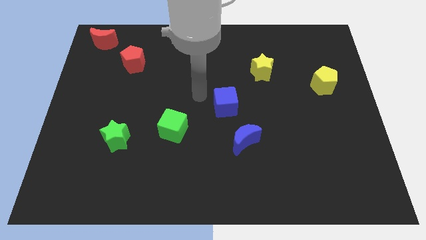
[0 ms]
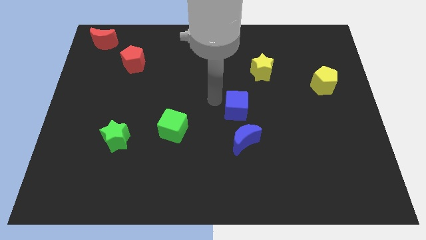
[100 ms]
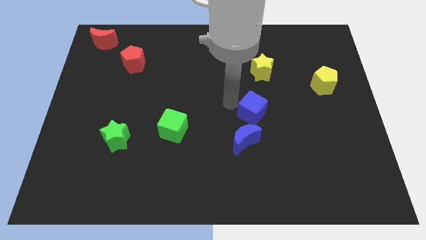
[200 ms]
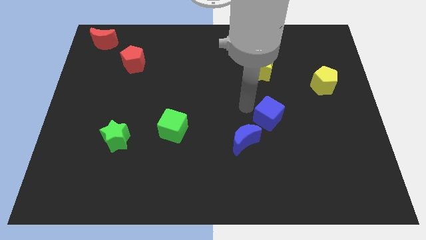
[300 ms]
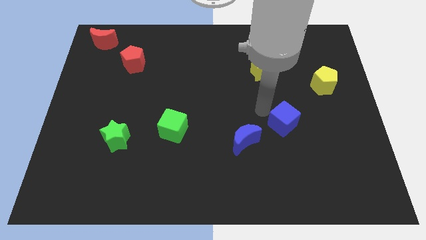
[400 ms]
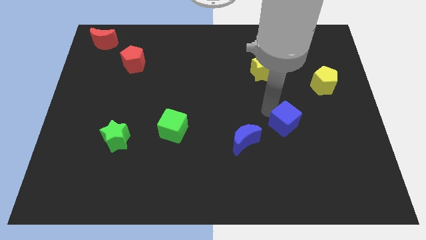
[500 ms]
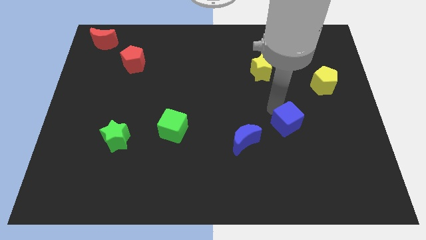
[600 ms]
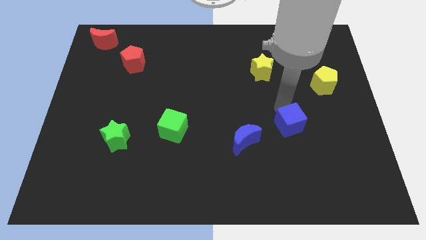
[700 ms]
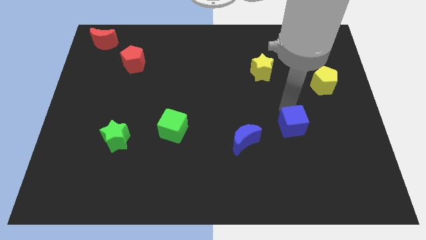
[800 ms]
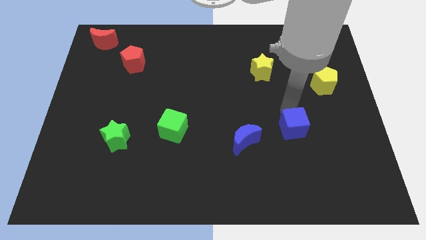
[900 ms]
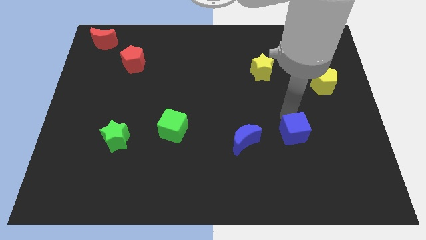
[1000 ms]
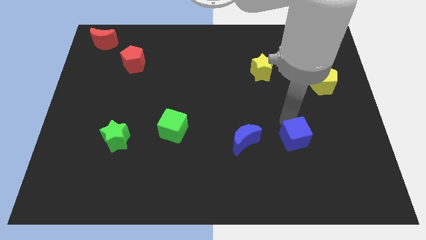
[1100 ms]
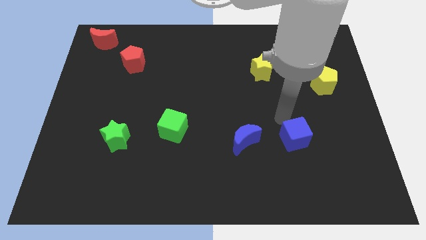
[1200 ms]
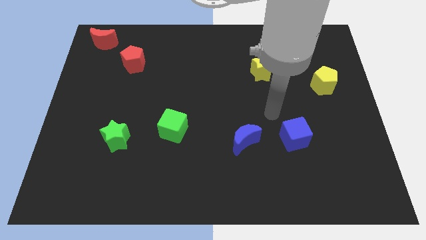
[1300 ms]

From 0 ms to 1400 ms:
slide the blue cube to the right of the blue moon

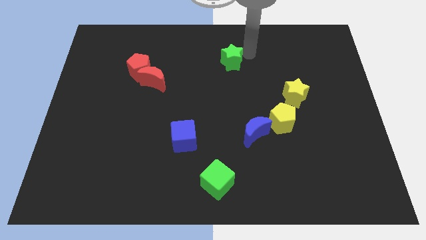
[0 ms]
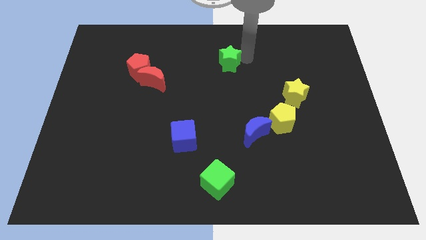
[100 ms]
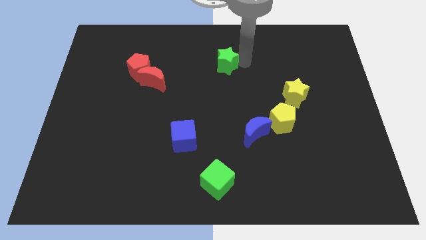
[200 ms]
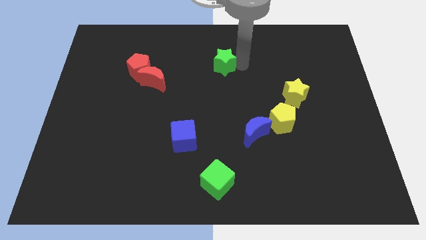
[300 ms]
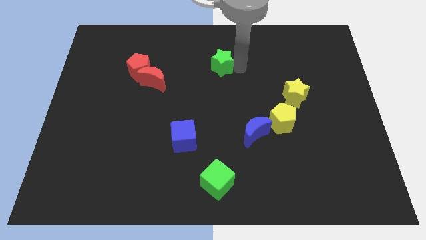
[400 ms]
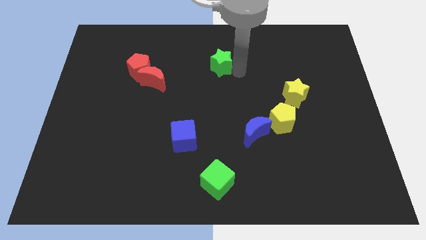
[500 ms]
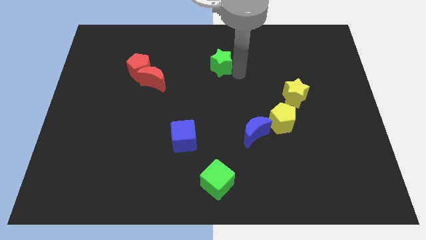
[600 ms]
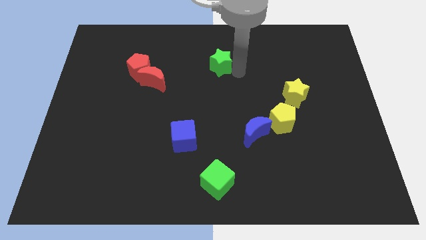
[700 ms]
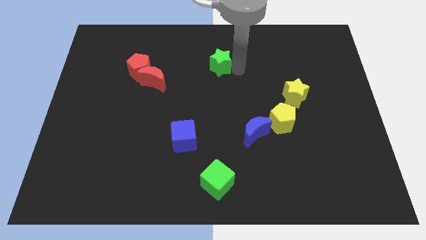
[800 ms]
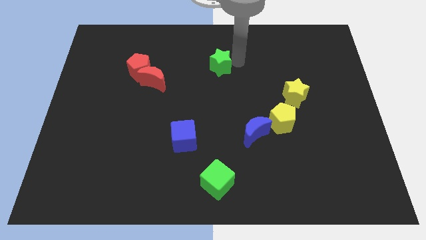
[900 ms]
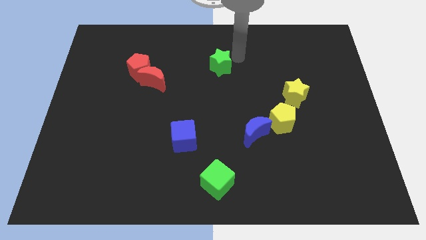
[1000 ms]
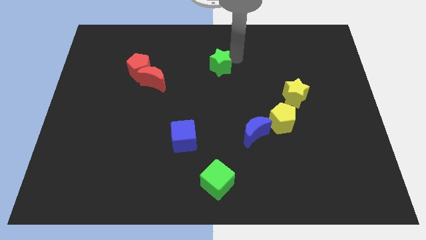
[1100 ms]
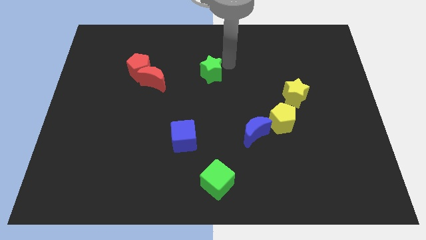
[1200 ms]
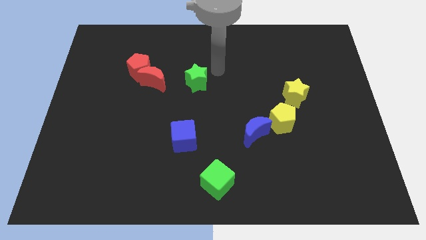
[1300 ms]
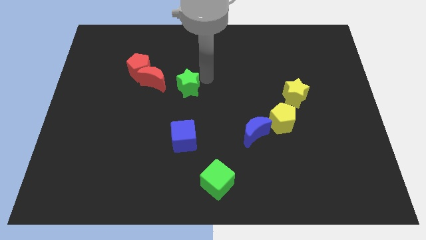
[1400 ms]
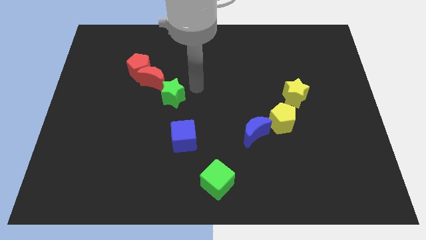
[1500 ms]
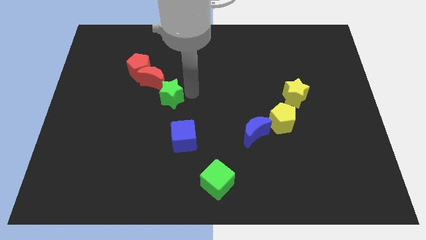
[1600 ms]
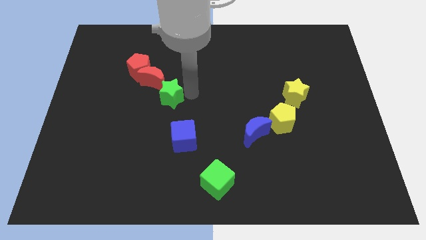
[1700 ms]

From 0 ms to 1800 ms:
push the green star close to the red moon

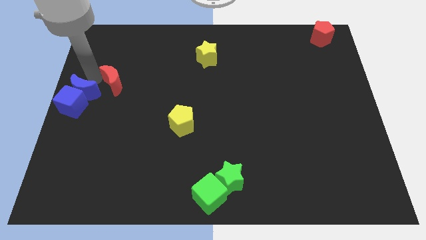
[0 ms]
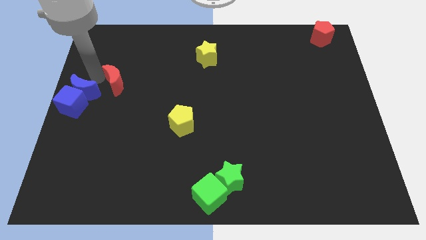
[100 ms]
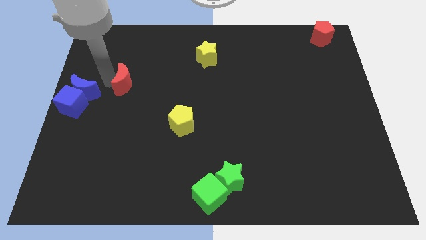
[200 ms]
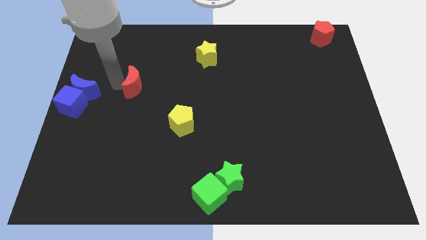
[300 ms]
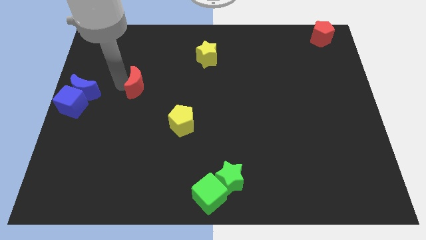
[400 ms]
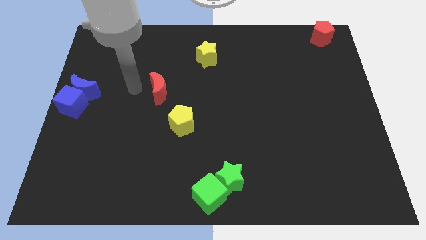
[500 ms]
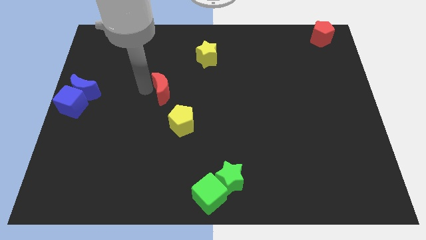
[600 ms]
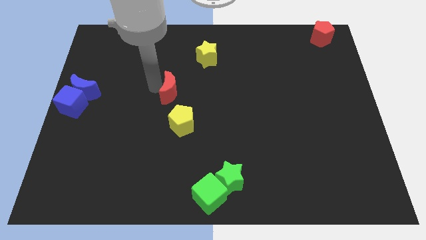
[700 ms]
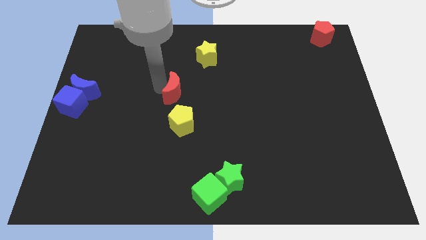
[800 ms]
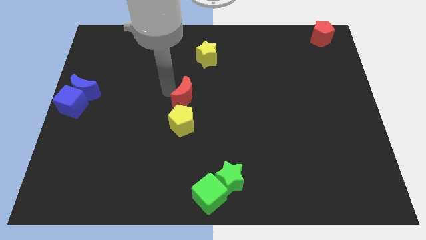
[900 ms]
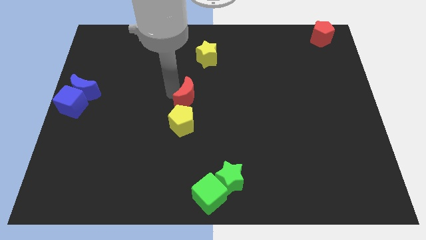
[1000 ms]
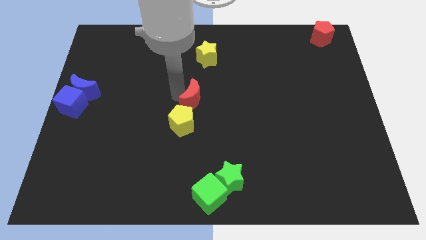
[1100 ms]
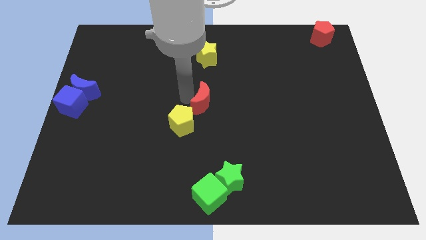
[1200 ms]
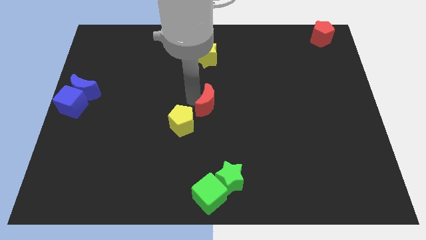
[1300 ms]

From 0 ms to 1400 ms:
move the red moon away from the blue moon

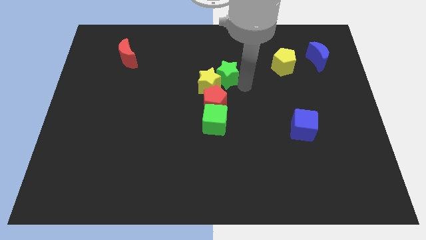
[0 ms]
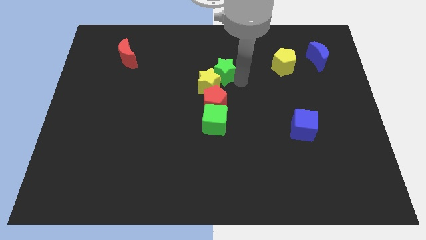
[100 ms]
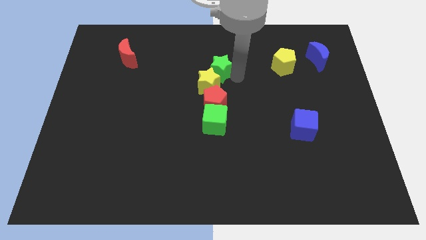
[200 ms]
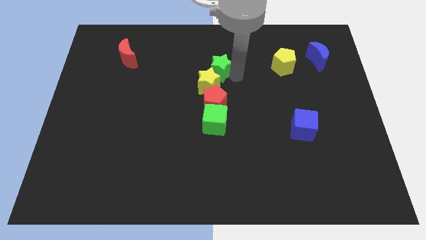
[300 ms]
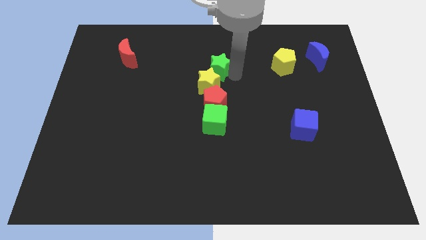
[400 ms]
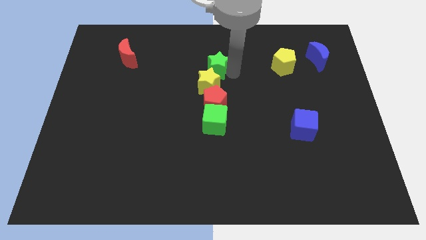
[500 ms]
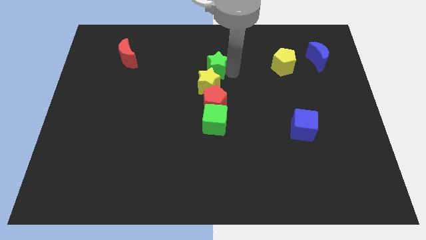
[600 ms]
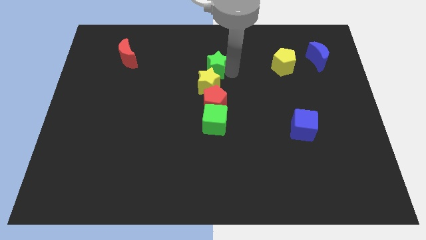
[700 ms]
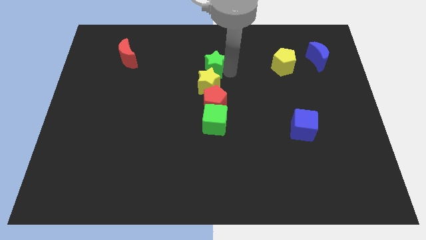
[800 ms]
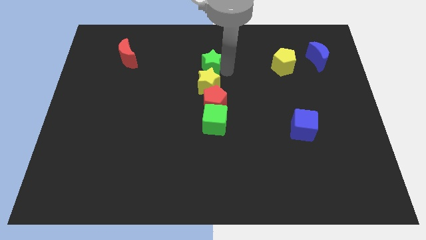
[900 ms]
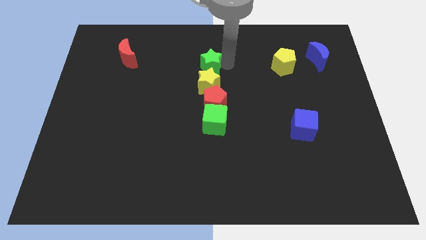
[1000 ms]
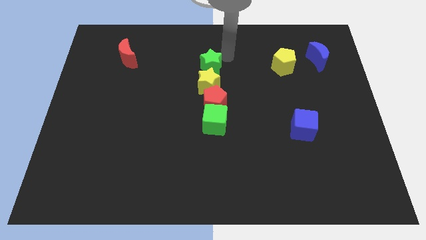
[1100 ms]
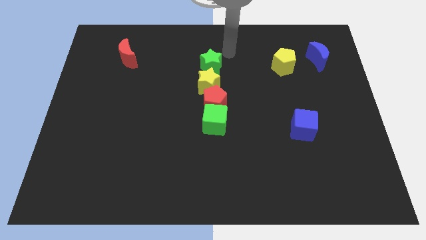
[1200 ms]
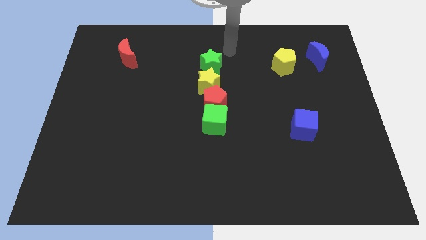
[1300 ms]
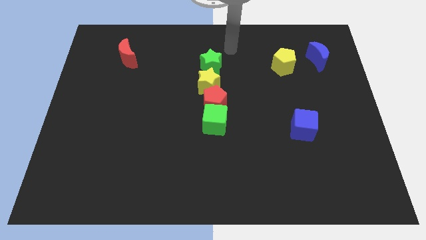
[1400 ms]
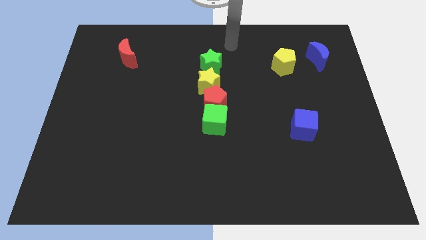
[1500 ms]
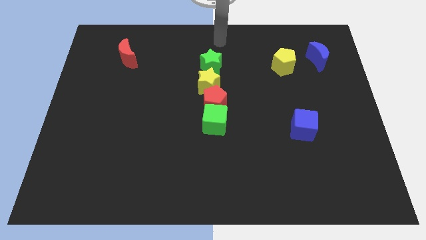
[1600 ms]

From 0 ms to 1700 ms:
place your arm to the top center of the board

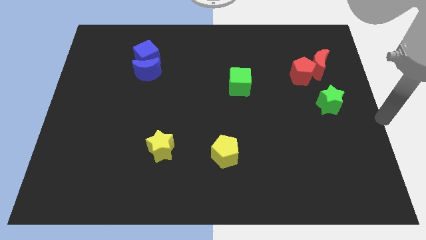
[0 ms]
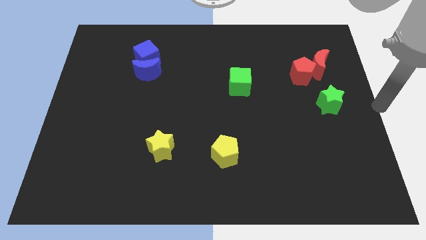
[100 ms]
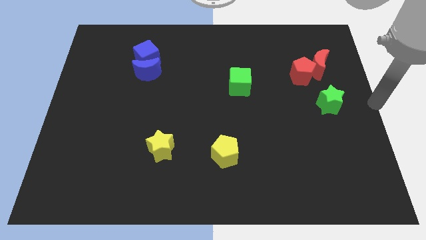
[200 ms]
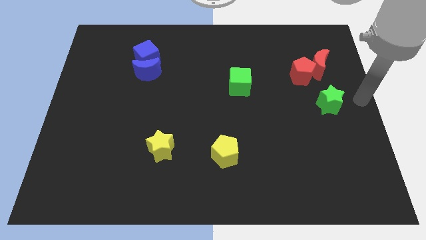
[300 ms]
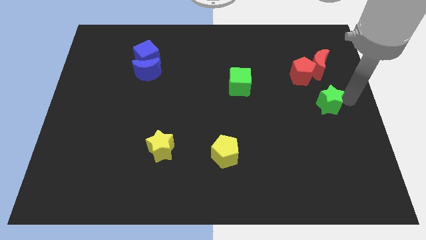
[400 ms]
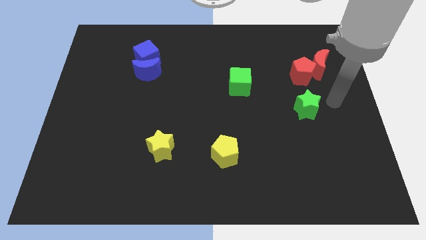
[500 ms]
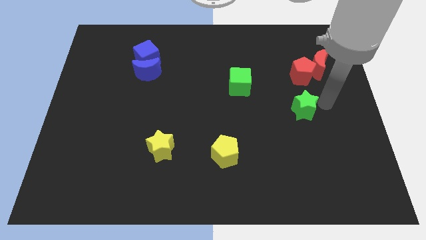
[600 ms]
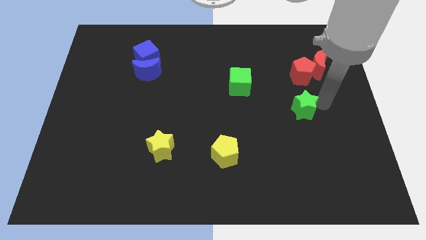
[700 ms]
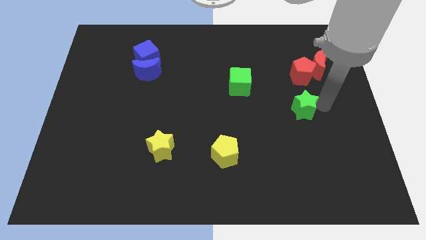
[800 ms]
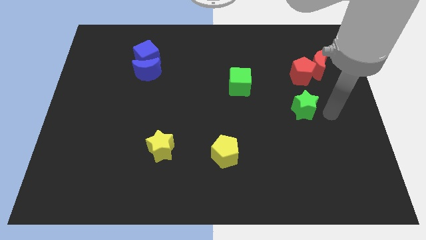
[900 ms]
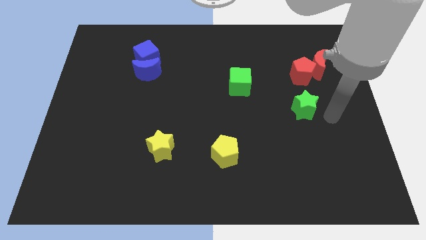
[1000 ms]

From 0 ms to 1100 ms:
move the green star below the red pentagon

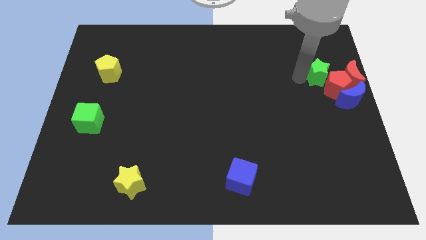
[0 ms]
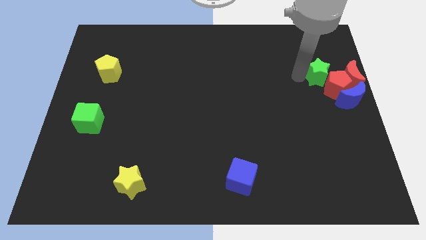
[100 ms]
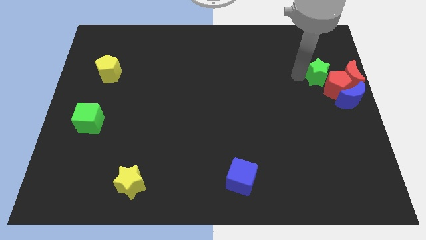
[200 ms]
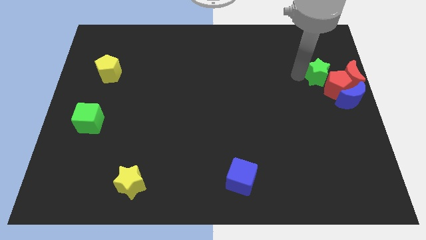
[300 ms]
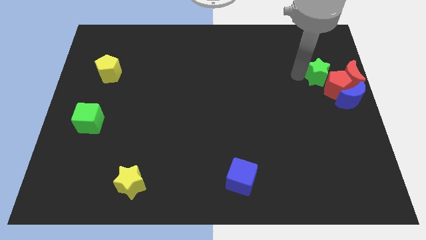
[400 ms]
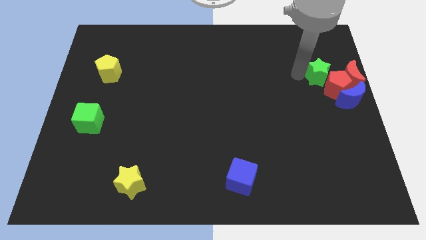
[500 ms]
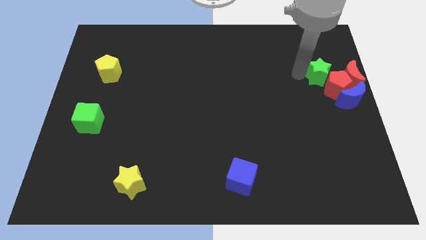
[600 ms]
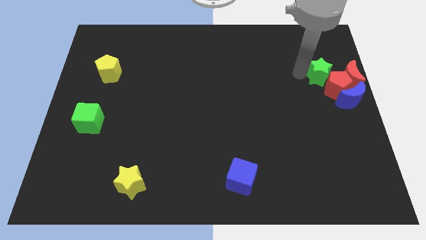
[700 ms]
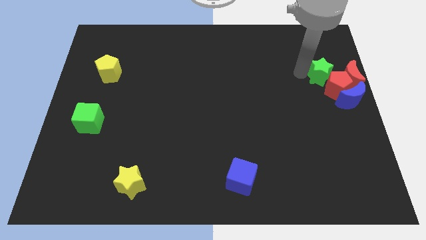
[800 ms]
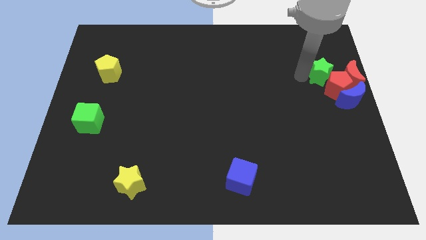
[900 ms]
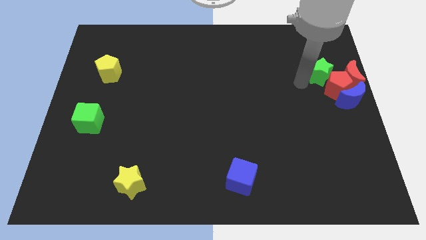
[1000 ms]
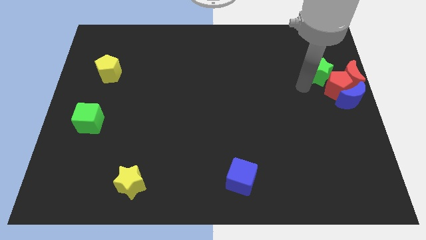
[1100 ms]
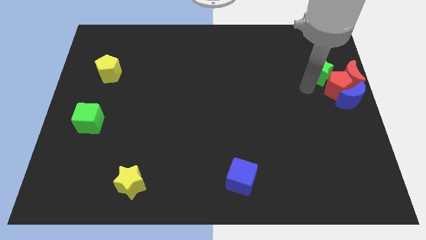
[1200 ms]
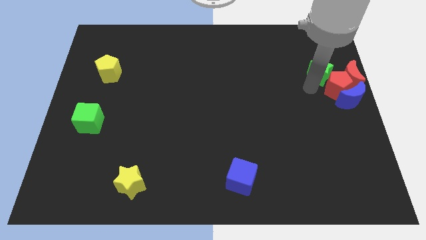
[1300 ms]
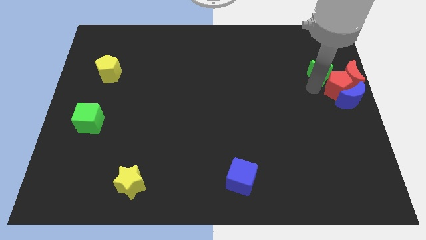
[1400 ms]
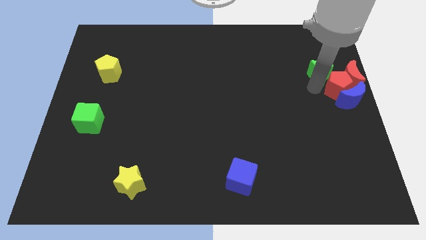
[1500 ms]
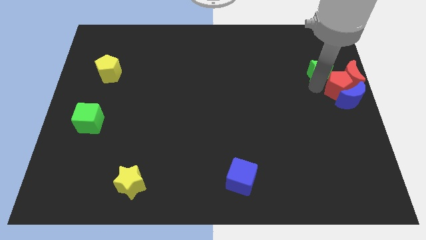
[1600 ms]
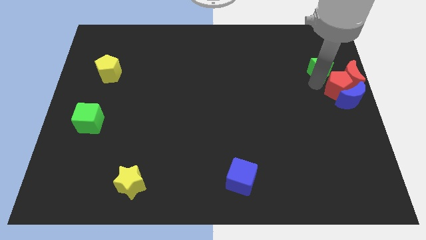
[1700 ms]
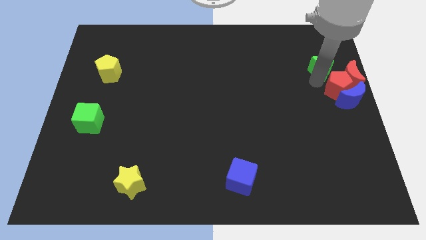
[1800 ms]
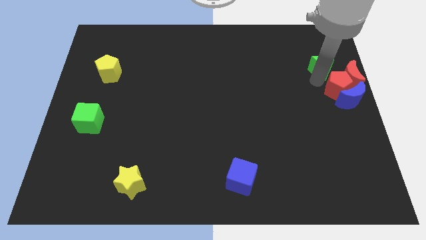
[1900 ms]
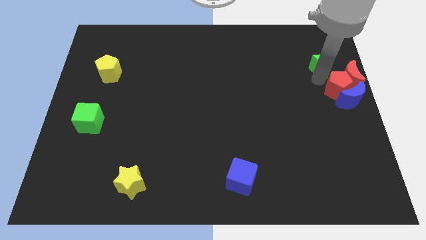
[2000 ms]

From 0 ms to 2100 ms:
push the green star to the top of the red pentagon
